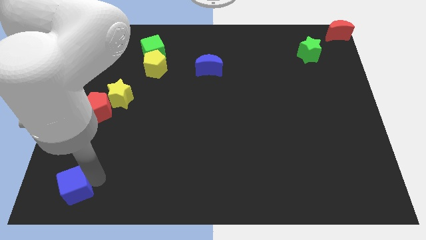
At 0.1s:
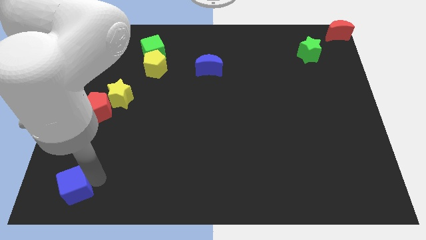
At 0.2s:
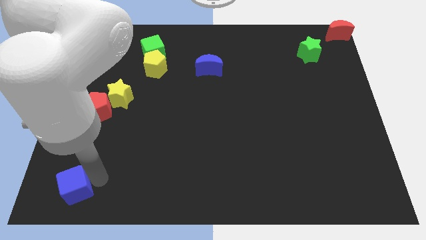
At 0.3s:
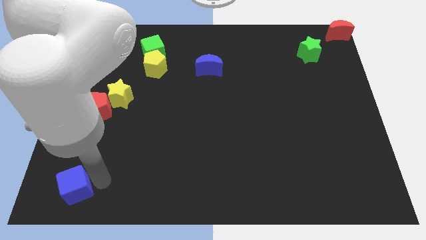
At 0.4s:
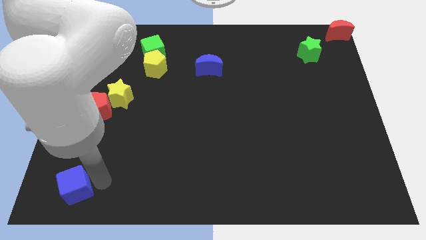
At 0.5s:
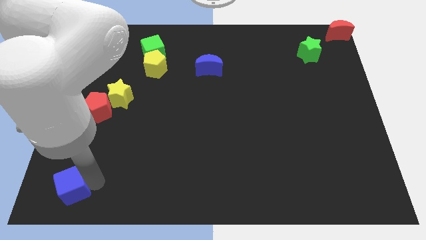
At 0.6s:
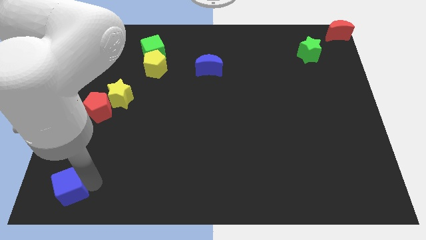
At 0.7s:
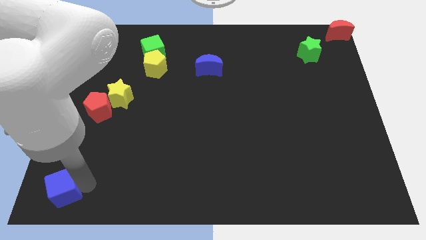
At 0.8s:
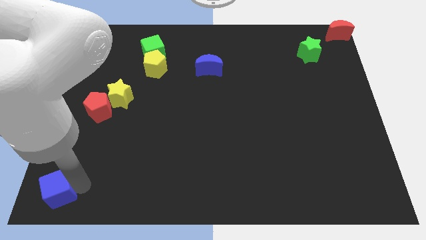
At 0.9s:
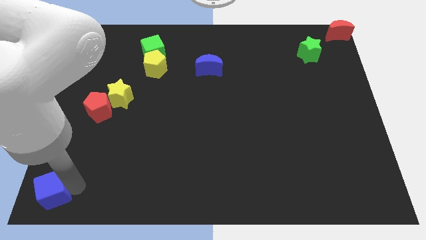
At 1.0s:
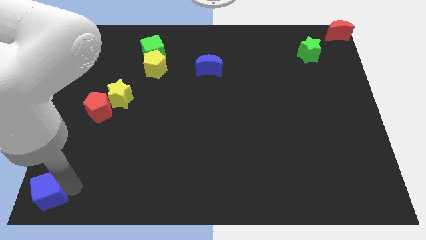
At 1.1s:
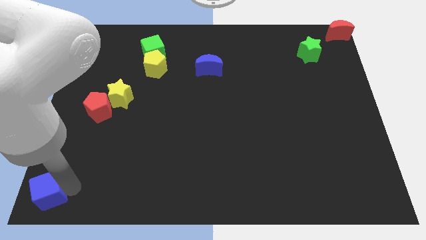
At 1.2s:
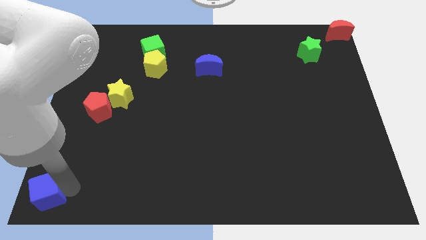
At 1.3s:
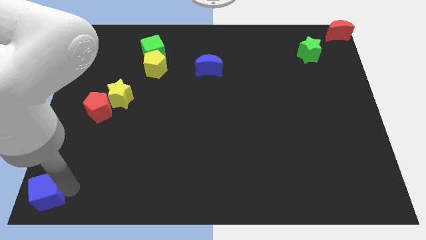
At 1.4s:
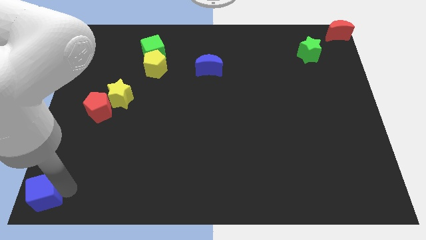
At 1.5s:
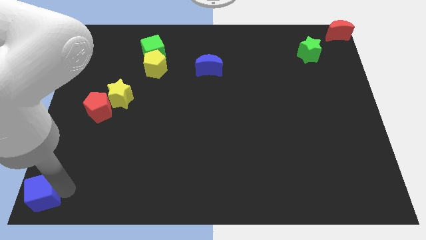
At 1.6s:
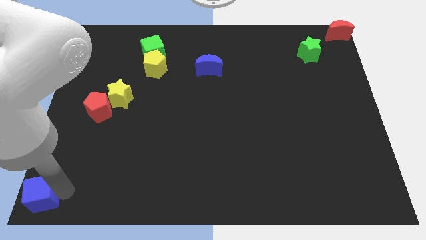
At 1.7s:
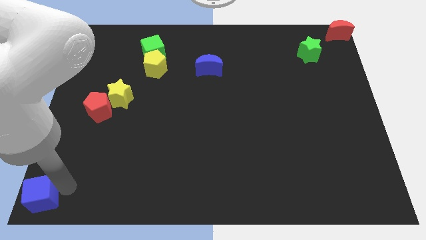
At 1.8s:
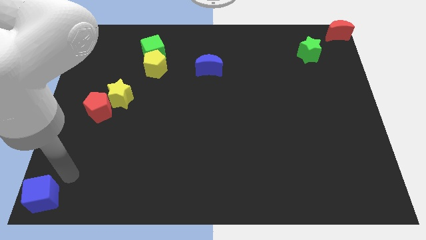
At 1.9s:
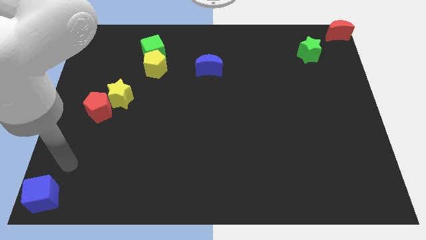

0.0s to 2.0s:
place the blue cube towards the bottom left corner

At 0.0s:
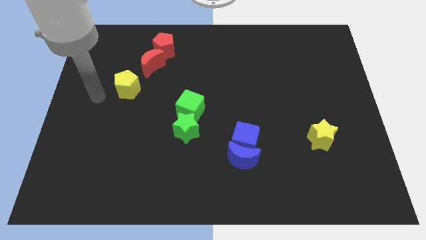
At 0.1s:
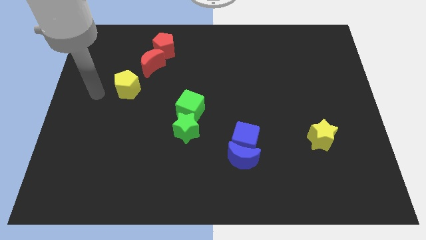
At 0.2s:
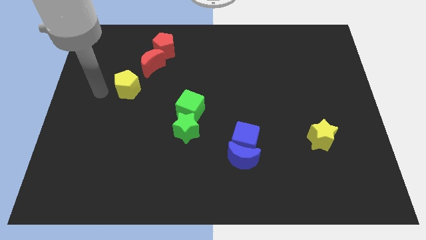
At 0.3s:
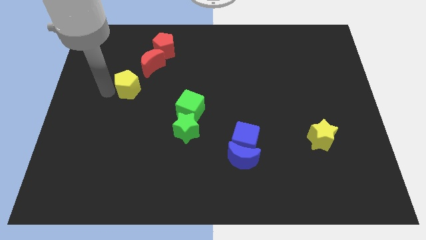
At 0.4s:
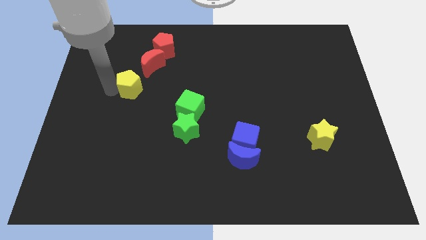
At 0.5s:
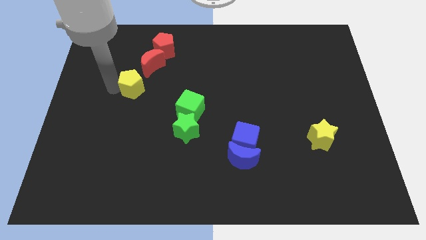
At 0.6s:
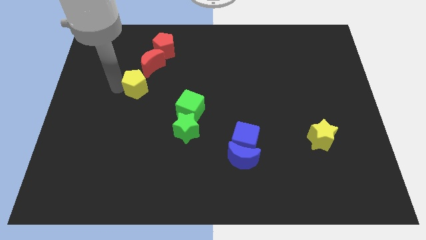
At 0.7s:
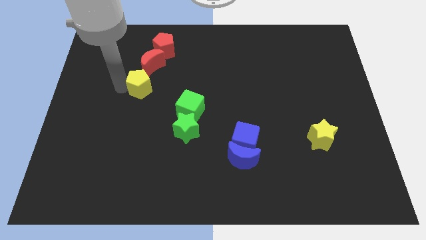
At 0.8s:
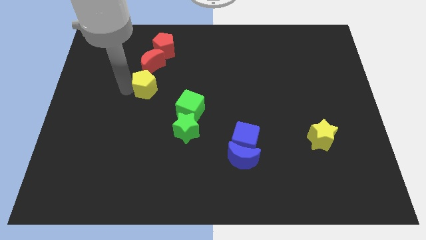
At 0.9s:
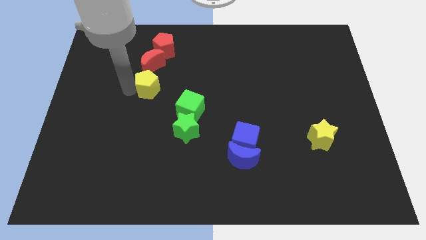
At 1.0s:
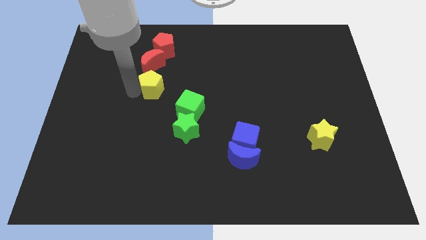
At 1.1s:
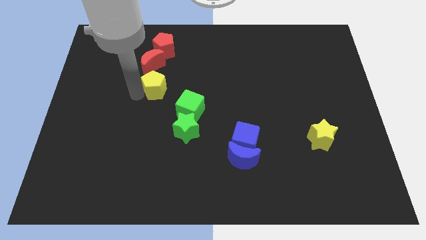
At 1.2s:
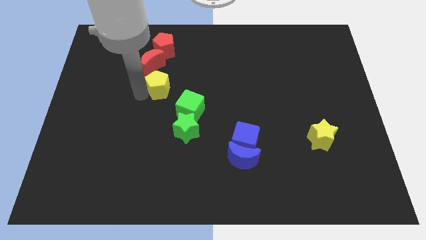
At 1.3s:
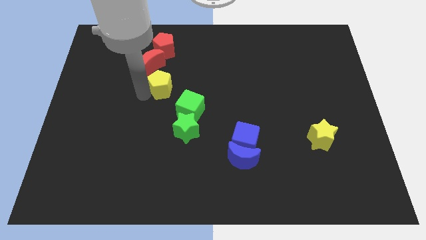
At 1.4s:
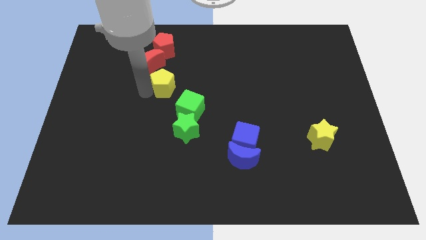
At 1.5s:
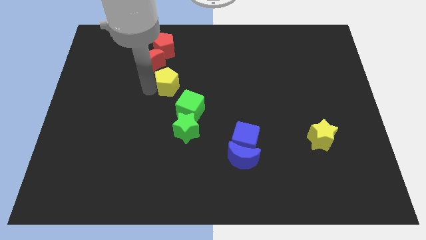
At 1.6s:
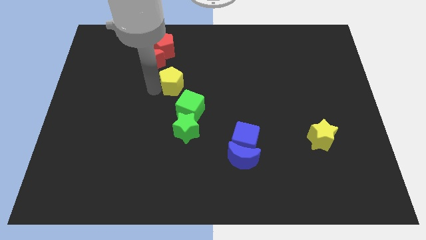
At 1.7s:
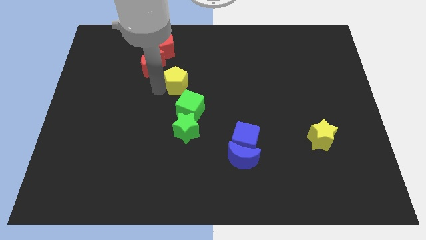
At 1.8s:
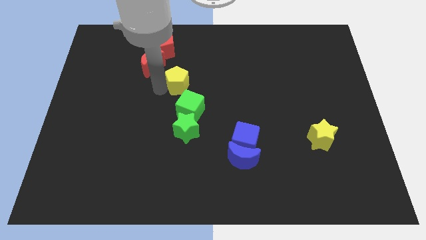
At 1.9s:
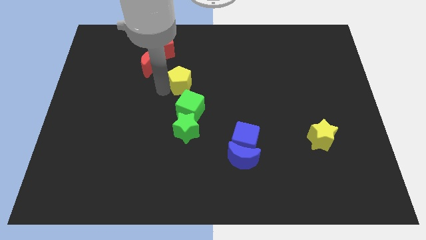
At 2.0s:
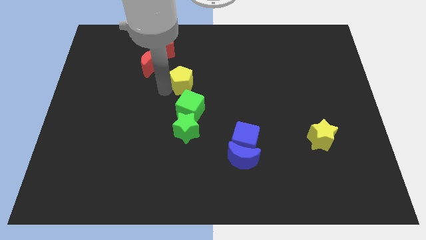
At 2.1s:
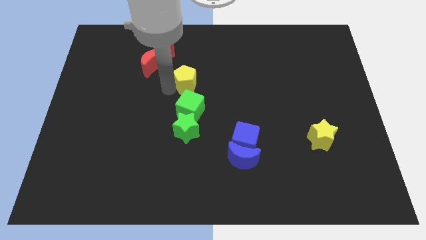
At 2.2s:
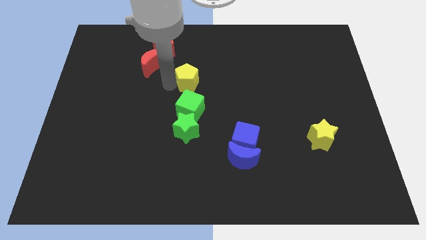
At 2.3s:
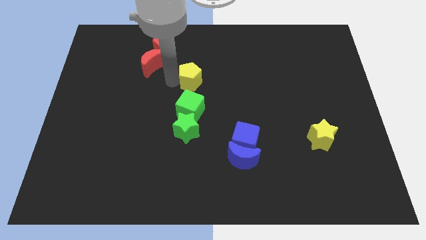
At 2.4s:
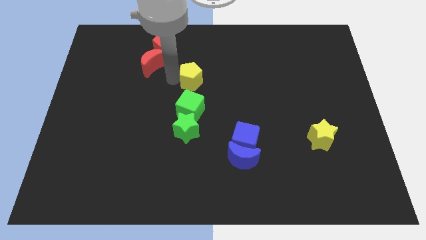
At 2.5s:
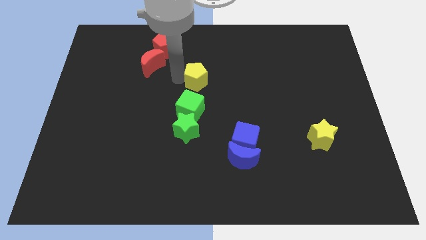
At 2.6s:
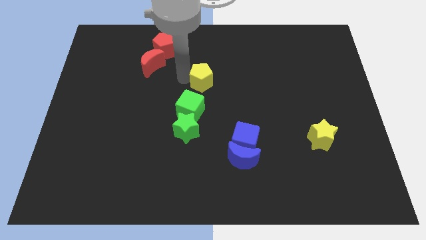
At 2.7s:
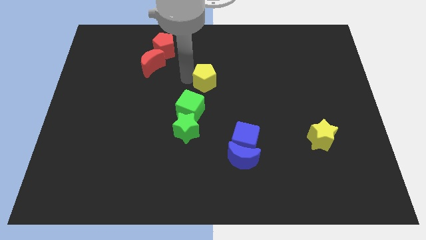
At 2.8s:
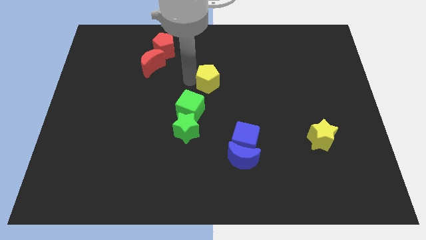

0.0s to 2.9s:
place yellow pentagon near to green cube

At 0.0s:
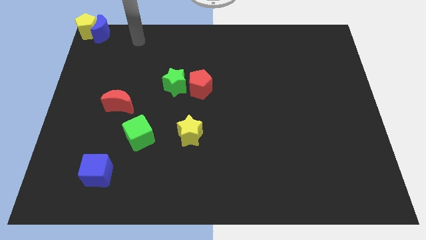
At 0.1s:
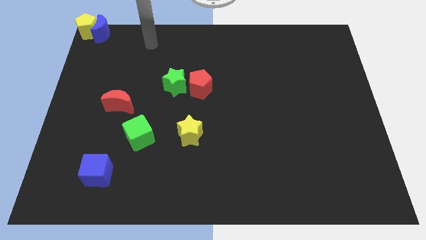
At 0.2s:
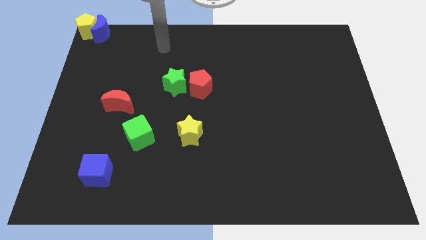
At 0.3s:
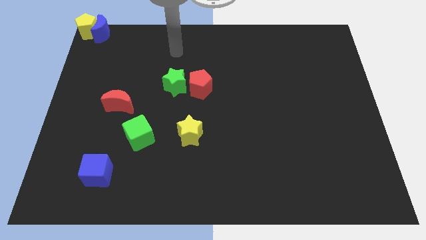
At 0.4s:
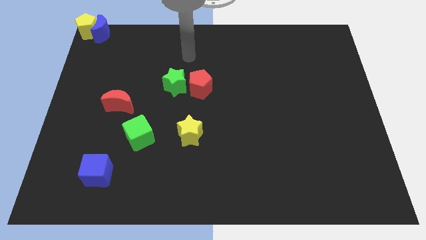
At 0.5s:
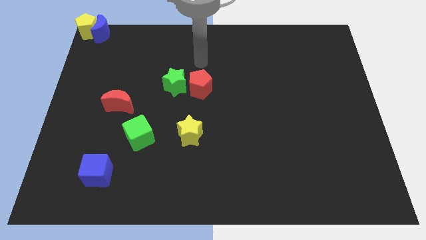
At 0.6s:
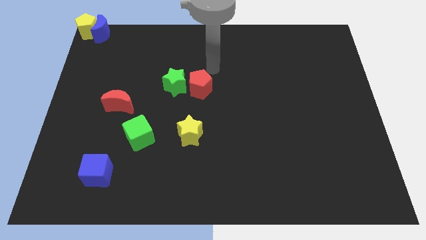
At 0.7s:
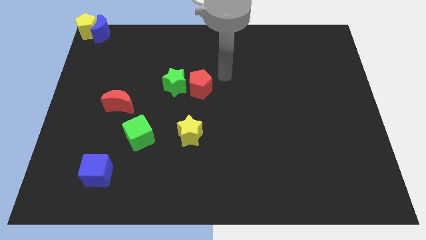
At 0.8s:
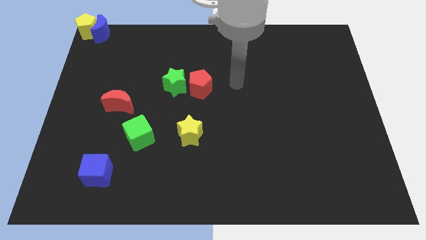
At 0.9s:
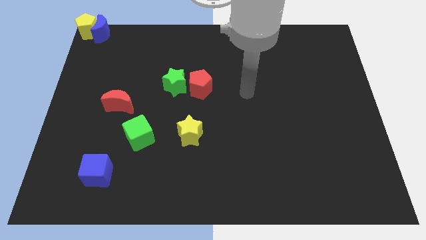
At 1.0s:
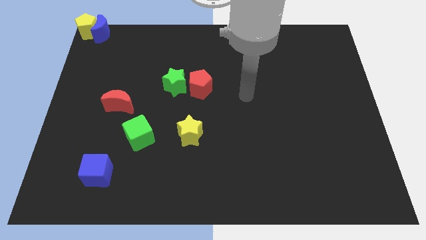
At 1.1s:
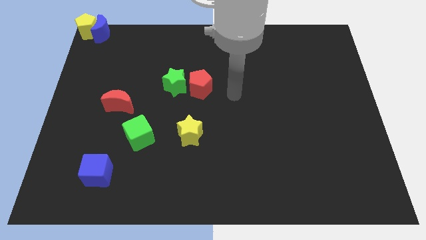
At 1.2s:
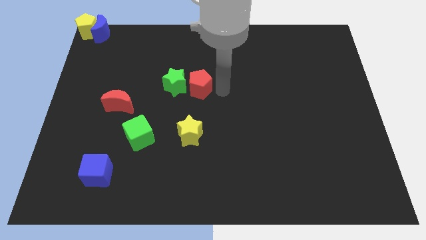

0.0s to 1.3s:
move your arm towards the center of the board

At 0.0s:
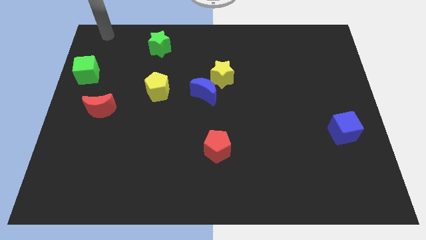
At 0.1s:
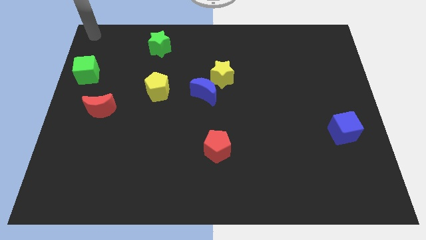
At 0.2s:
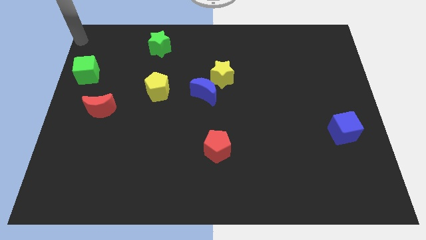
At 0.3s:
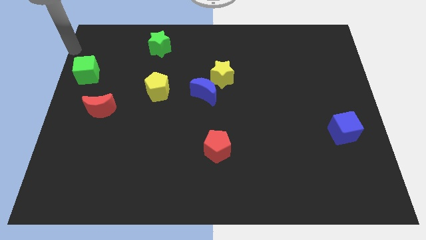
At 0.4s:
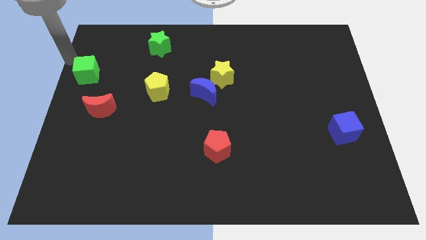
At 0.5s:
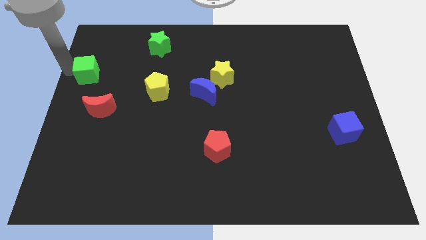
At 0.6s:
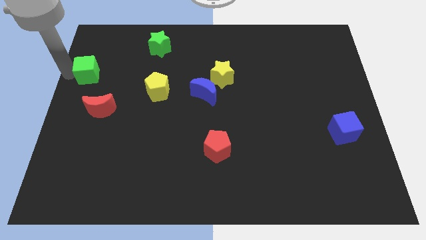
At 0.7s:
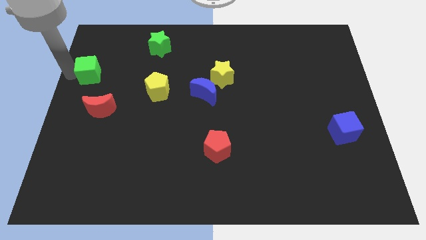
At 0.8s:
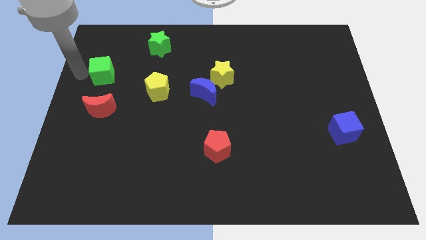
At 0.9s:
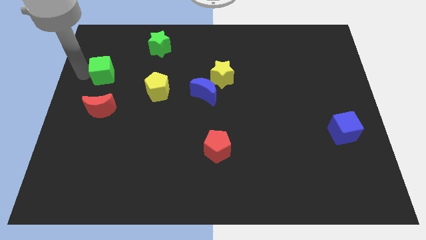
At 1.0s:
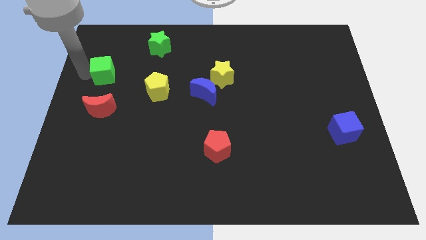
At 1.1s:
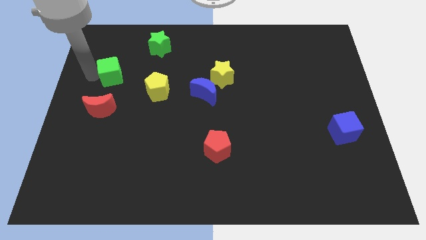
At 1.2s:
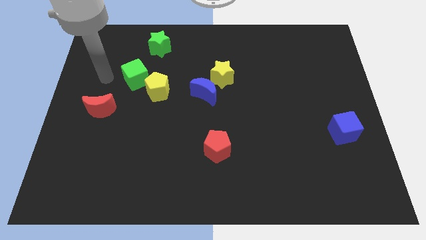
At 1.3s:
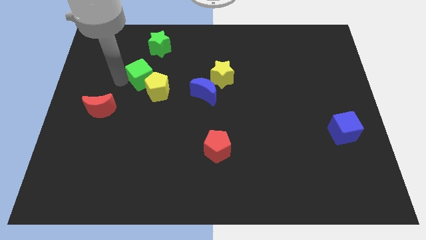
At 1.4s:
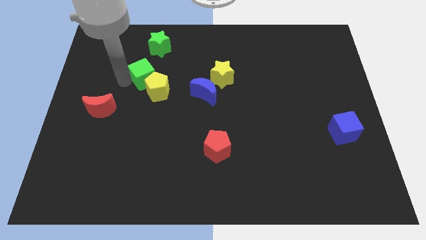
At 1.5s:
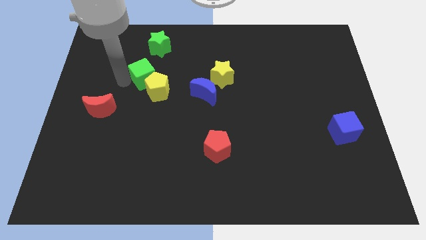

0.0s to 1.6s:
move green cube towards yellow pentagon

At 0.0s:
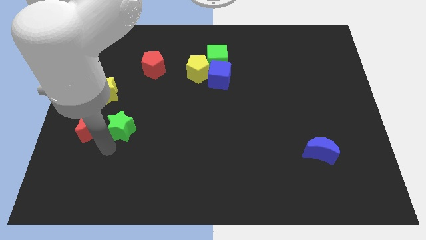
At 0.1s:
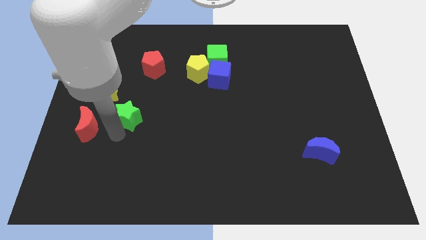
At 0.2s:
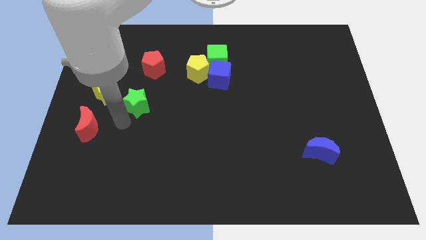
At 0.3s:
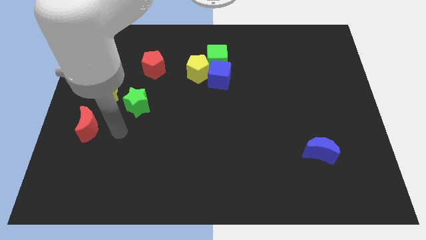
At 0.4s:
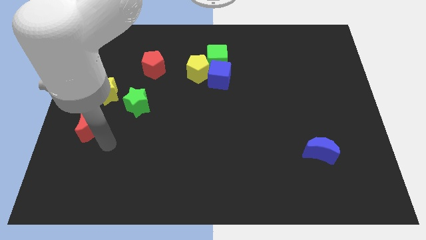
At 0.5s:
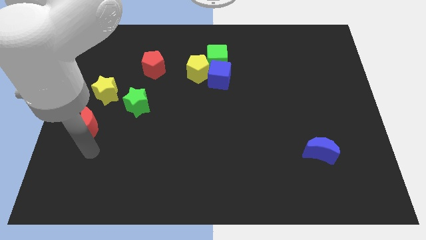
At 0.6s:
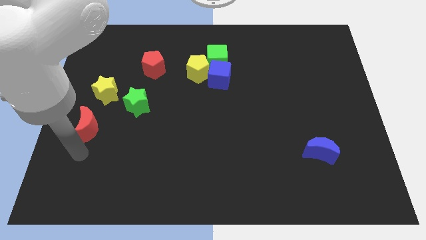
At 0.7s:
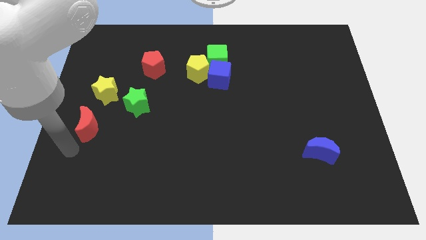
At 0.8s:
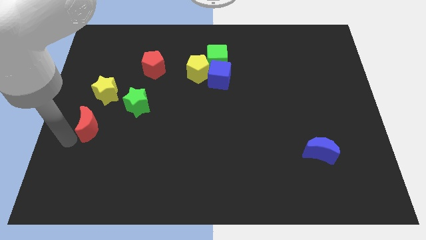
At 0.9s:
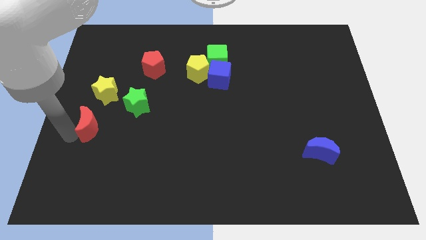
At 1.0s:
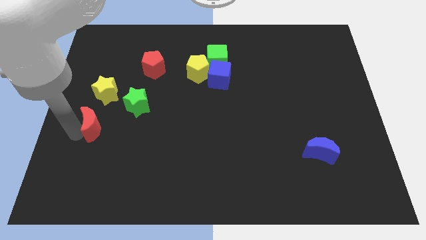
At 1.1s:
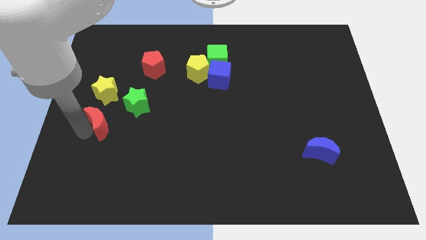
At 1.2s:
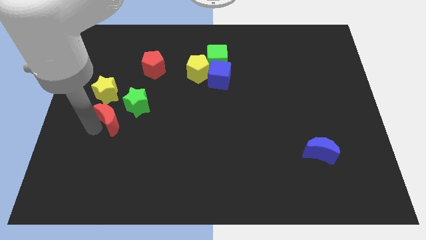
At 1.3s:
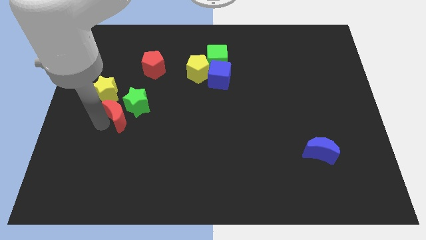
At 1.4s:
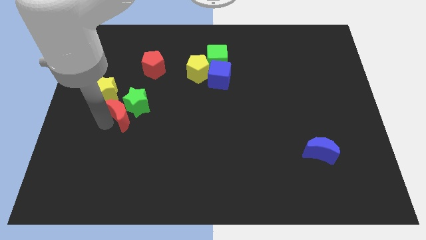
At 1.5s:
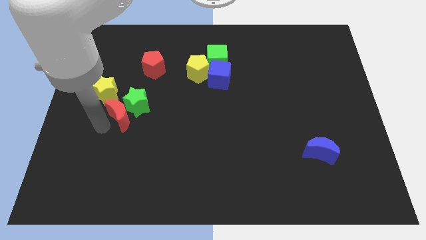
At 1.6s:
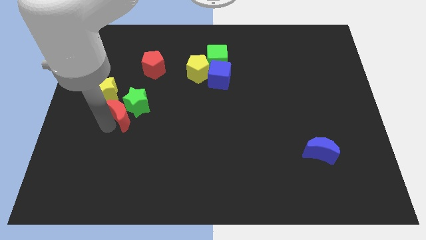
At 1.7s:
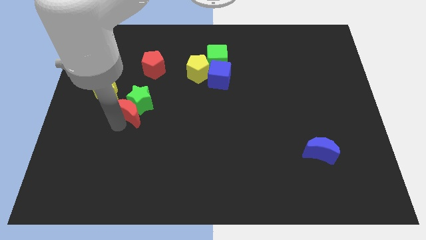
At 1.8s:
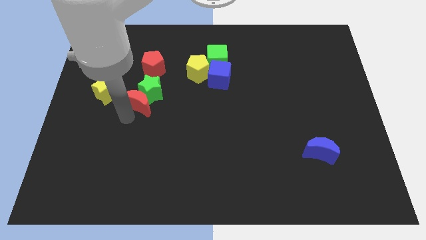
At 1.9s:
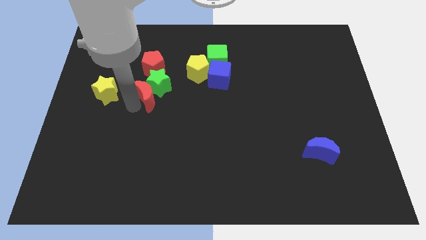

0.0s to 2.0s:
push the red moon into the green star
